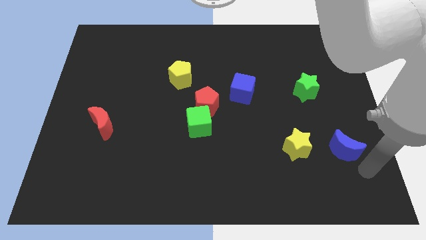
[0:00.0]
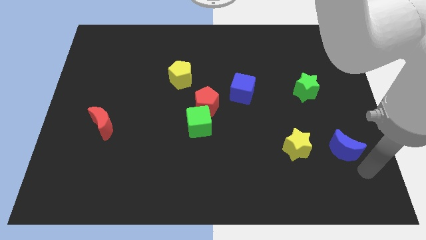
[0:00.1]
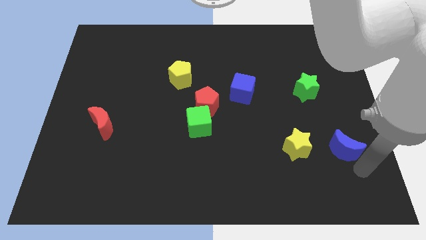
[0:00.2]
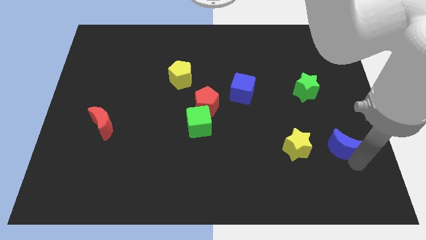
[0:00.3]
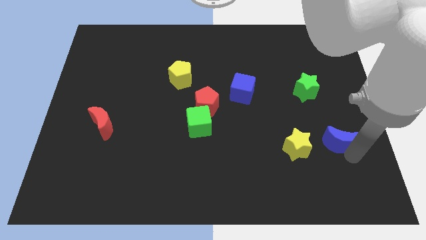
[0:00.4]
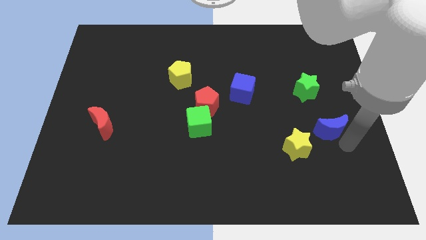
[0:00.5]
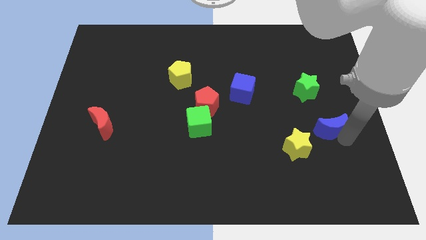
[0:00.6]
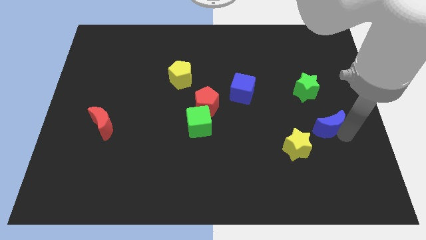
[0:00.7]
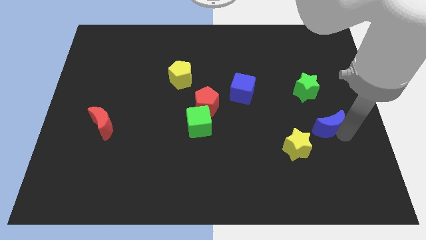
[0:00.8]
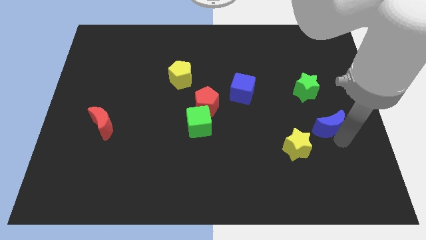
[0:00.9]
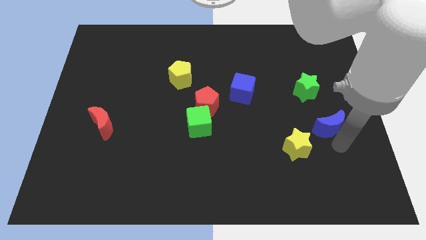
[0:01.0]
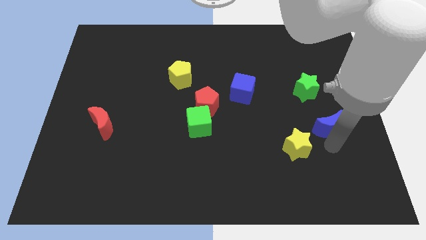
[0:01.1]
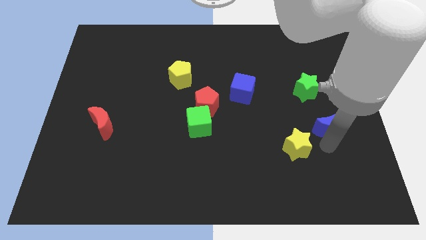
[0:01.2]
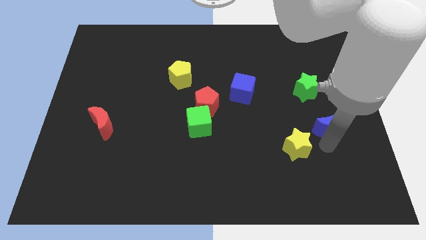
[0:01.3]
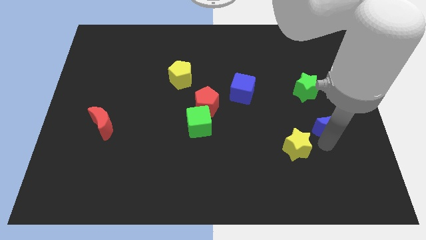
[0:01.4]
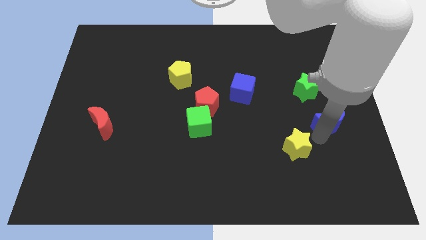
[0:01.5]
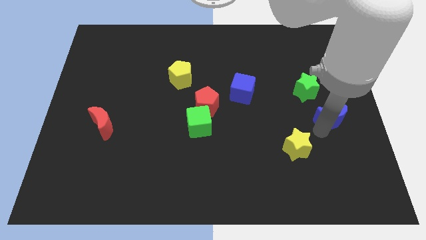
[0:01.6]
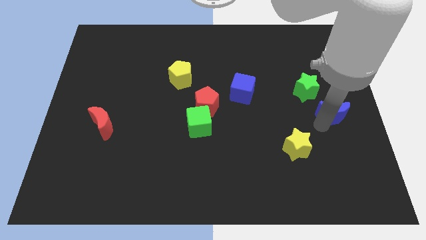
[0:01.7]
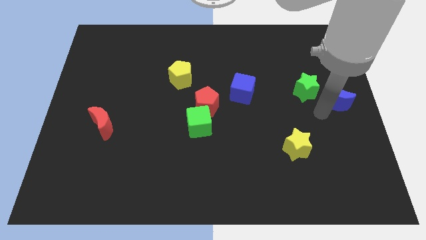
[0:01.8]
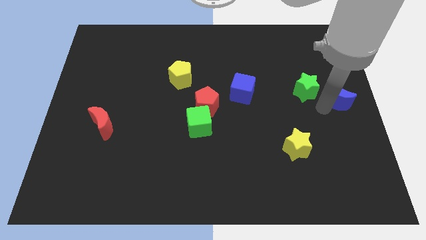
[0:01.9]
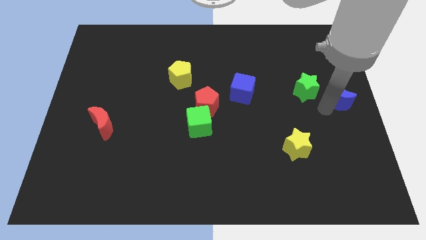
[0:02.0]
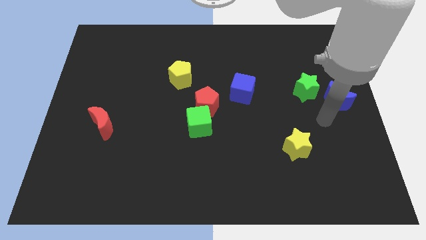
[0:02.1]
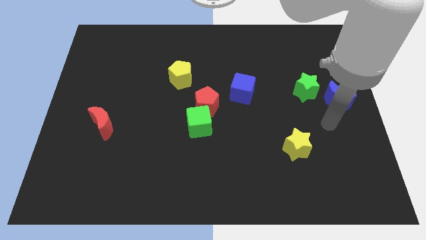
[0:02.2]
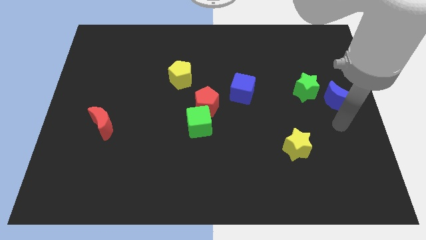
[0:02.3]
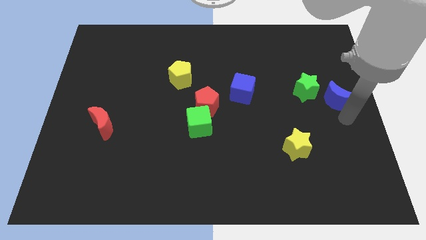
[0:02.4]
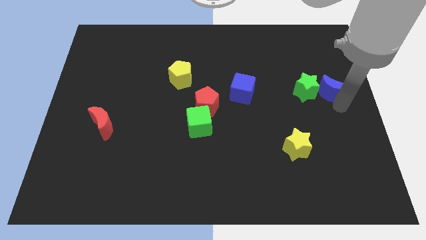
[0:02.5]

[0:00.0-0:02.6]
move the blue moon close to the right side of the green star

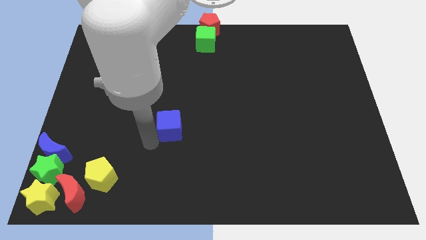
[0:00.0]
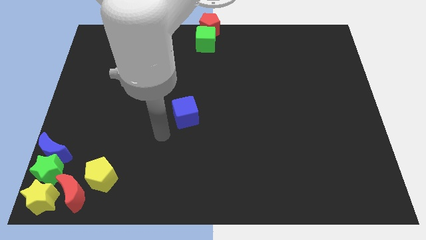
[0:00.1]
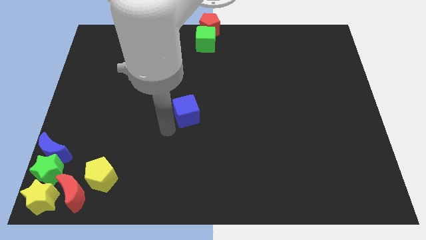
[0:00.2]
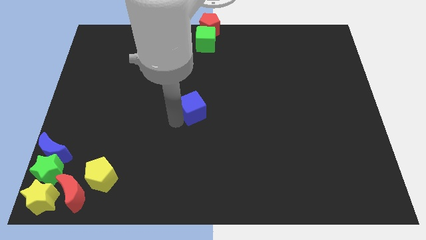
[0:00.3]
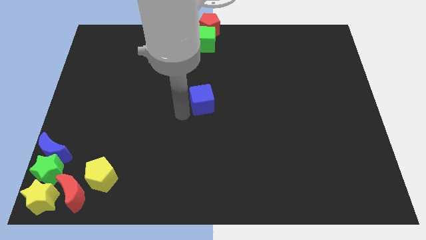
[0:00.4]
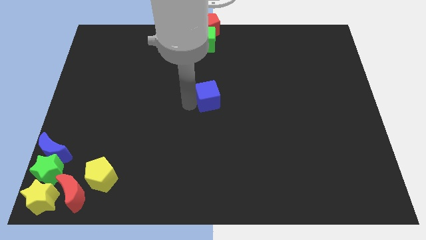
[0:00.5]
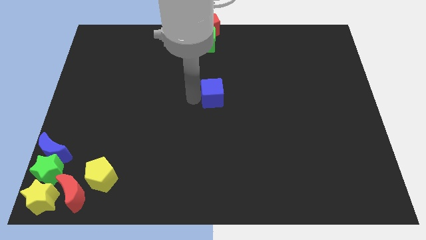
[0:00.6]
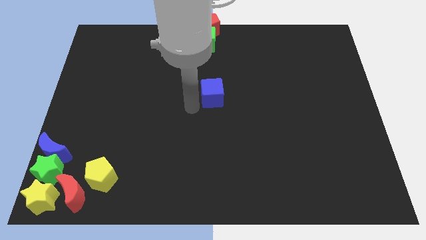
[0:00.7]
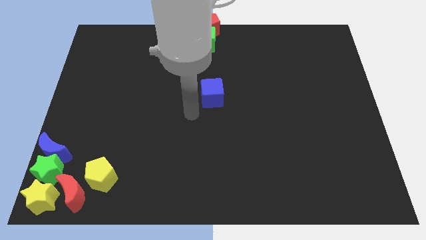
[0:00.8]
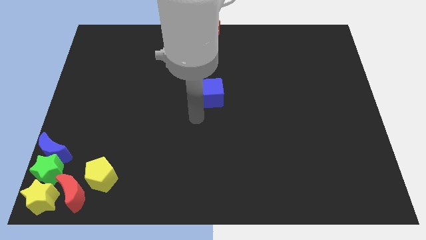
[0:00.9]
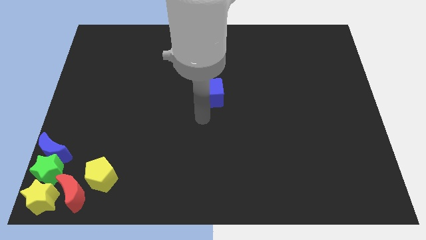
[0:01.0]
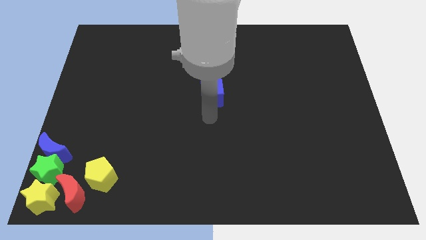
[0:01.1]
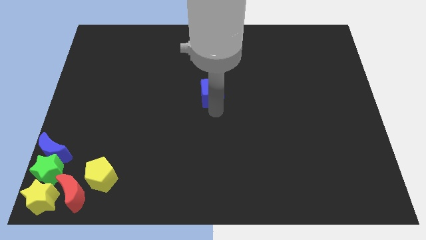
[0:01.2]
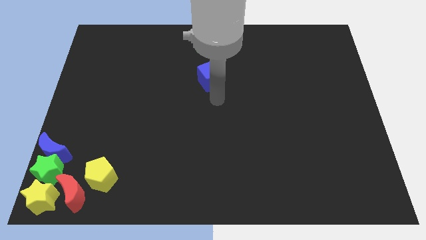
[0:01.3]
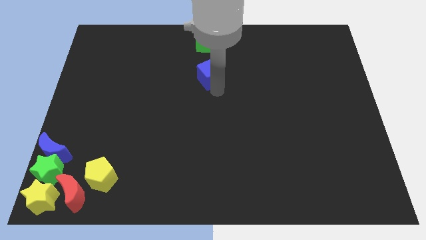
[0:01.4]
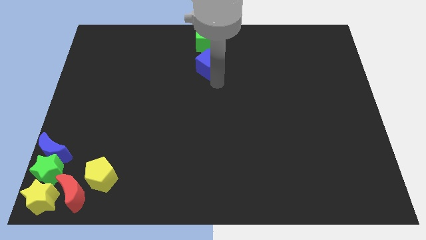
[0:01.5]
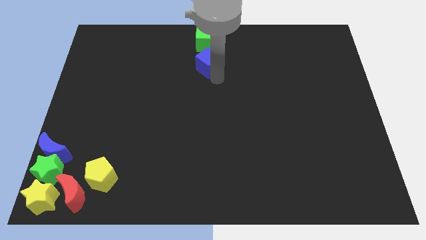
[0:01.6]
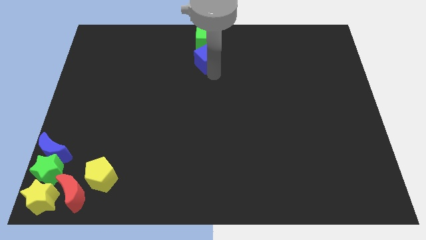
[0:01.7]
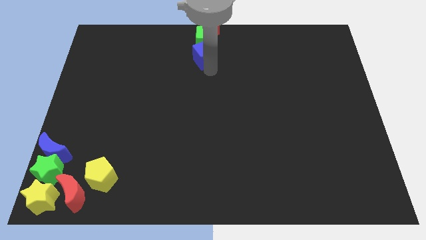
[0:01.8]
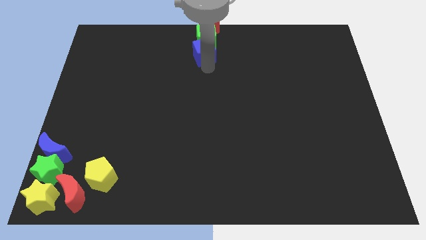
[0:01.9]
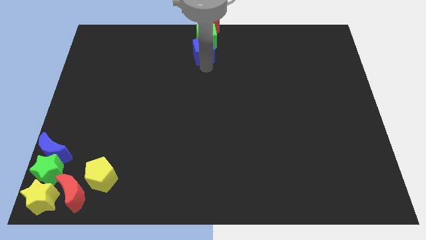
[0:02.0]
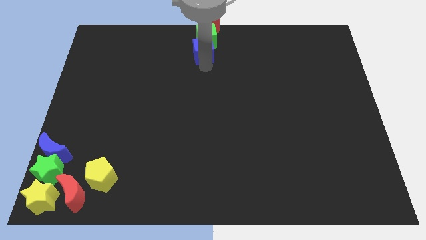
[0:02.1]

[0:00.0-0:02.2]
push the blue cube close to the green cube

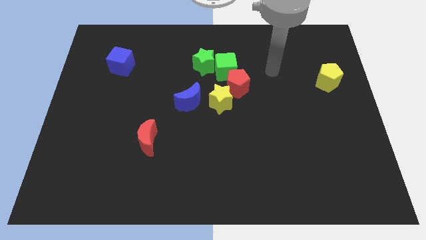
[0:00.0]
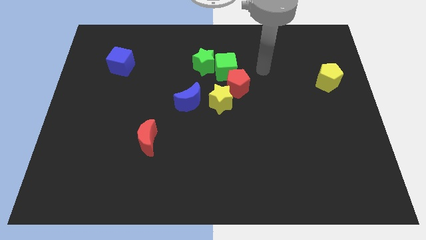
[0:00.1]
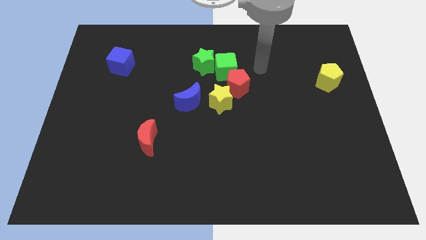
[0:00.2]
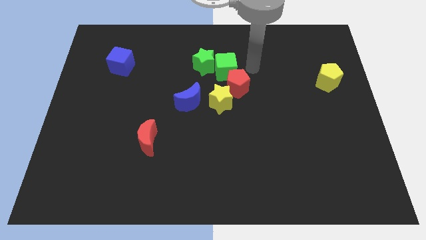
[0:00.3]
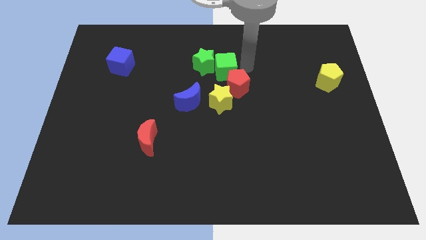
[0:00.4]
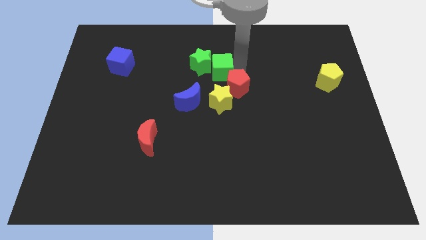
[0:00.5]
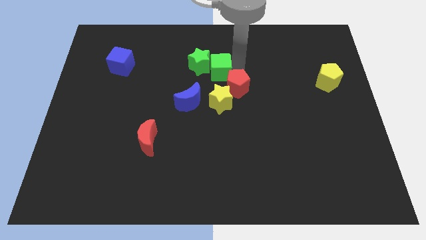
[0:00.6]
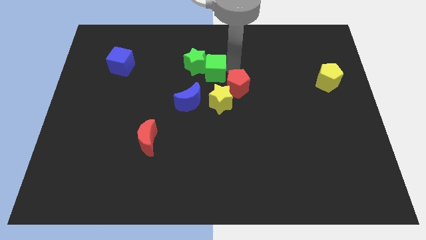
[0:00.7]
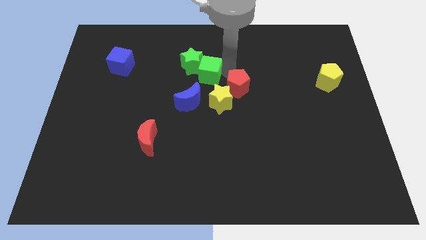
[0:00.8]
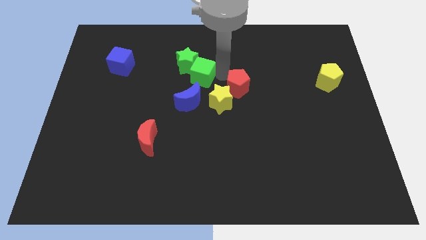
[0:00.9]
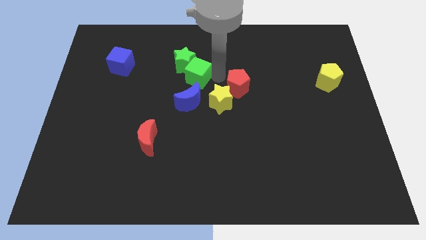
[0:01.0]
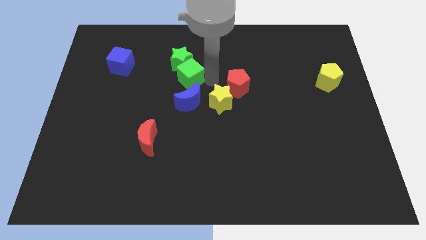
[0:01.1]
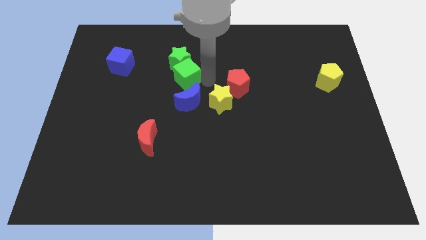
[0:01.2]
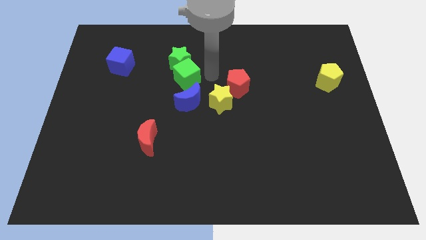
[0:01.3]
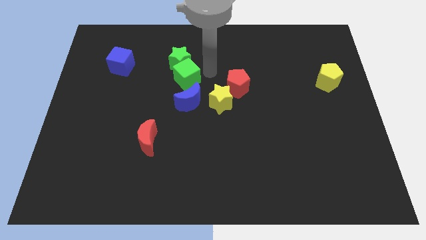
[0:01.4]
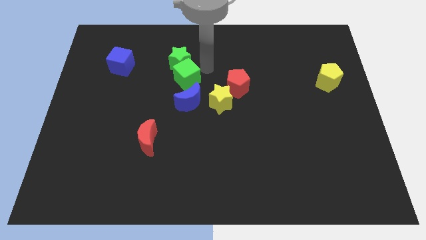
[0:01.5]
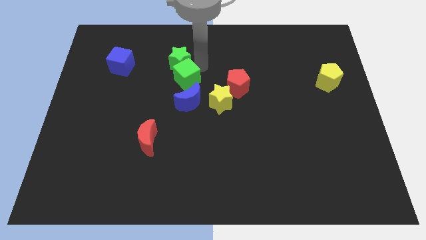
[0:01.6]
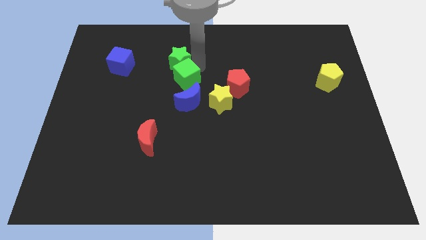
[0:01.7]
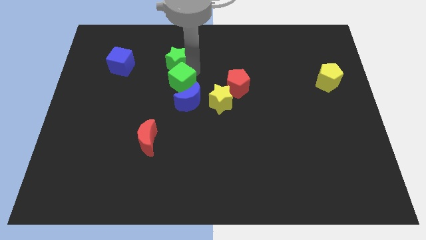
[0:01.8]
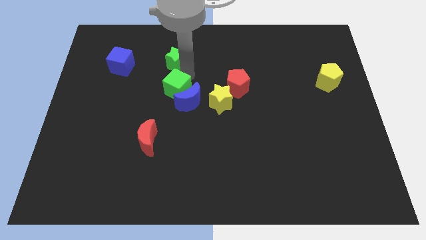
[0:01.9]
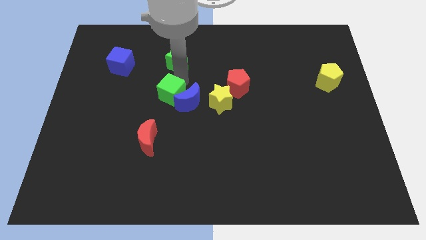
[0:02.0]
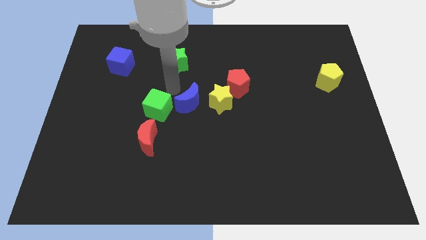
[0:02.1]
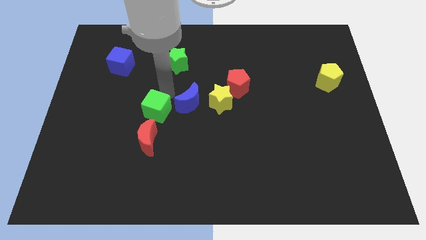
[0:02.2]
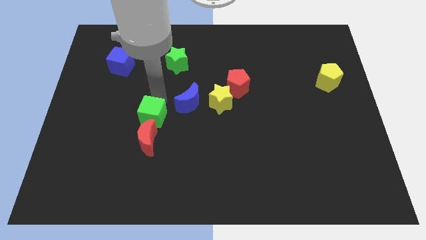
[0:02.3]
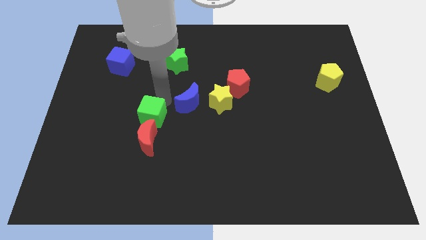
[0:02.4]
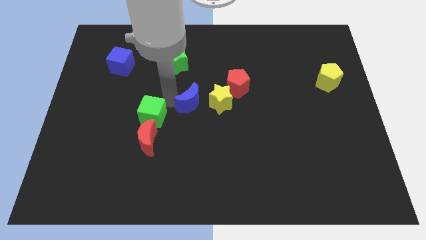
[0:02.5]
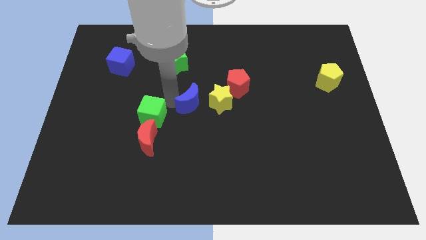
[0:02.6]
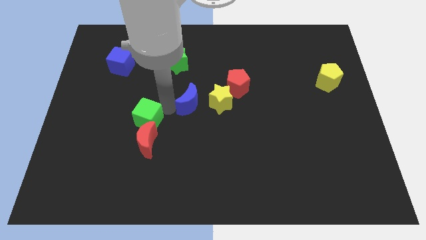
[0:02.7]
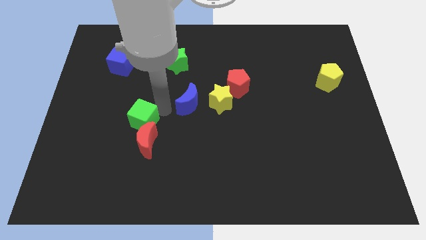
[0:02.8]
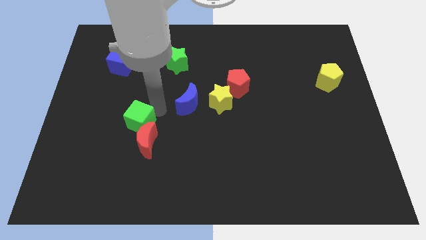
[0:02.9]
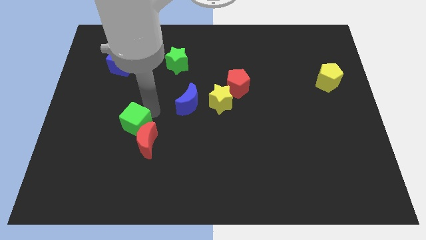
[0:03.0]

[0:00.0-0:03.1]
move the blue moon with the green cube

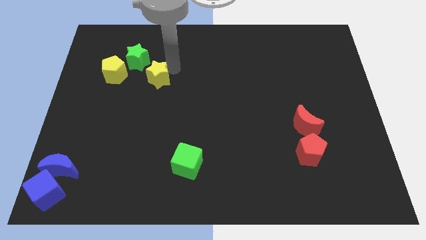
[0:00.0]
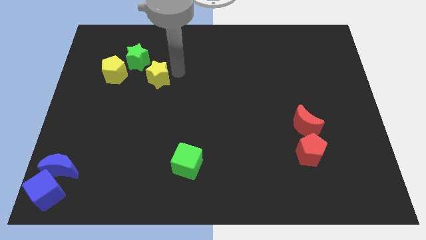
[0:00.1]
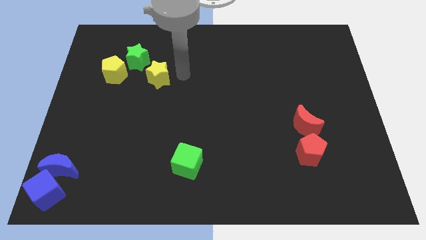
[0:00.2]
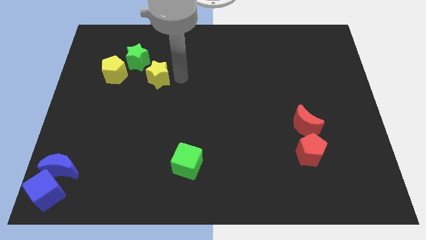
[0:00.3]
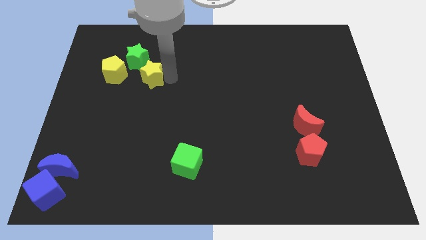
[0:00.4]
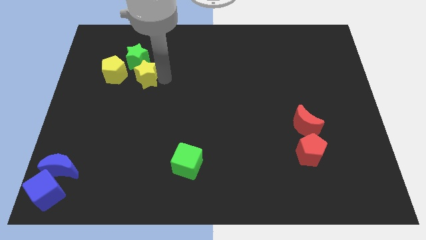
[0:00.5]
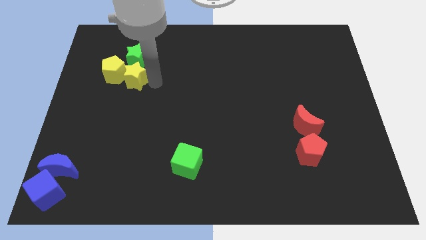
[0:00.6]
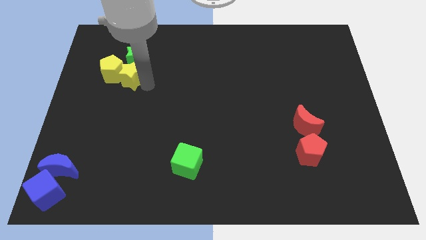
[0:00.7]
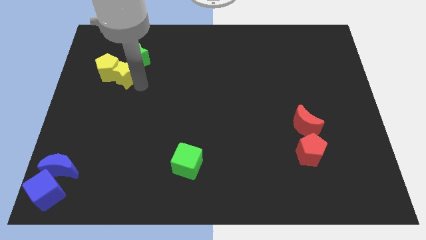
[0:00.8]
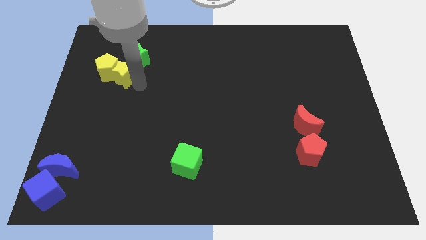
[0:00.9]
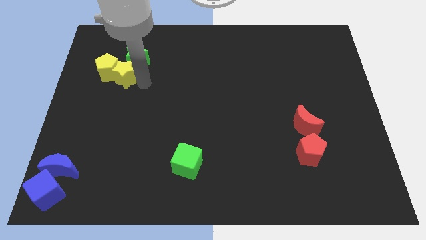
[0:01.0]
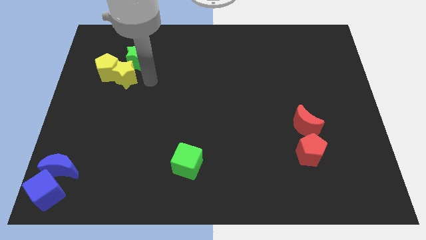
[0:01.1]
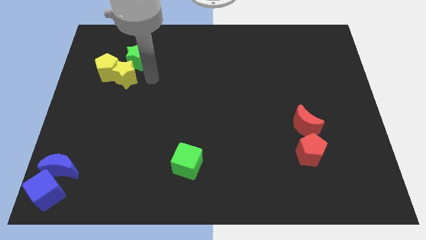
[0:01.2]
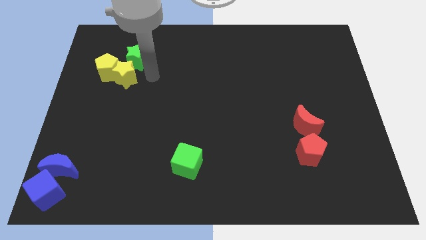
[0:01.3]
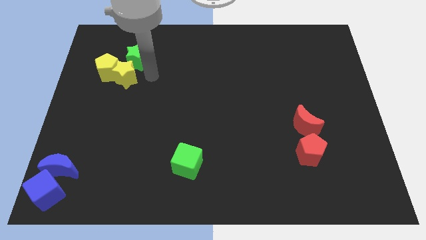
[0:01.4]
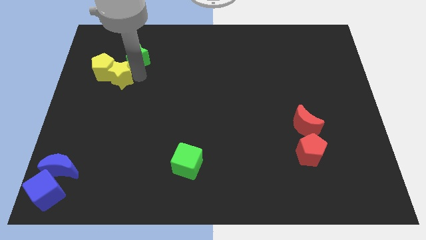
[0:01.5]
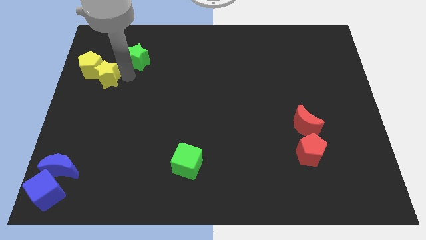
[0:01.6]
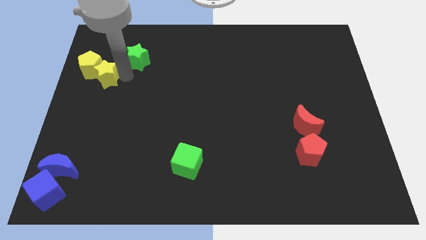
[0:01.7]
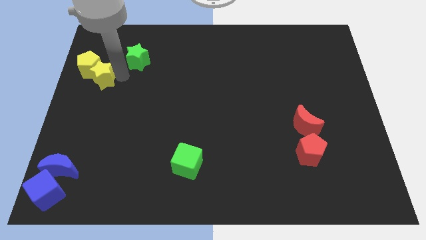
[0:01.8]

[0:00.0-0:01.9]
push the yellow star into the yellow pentagon
